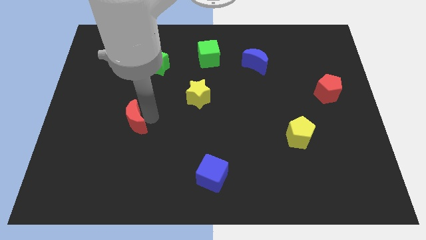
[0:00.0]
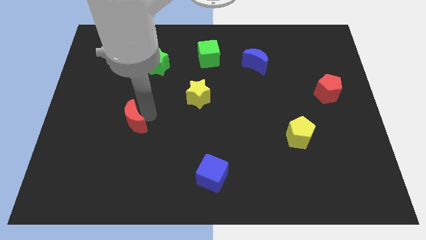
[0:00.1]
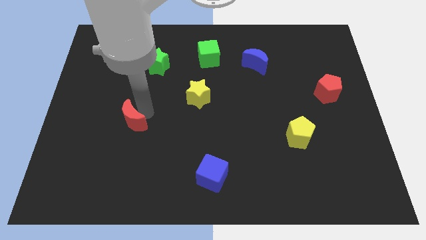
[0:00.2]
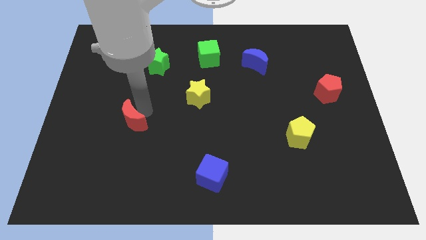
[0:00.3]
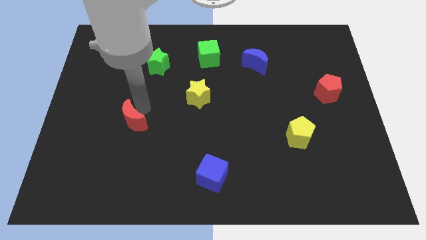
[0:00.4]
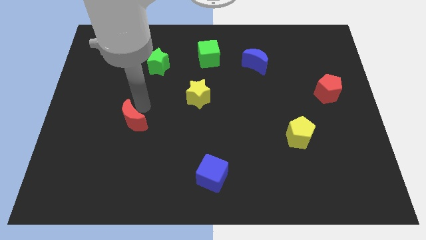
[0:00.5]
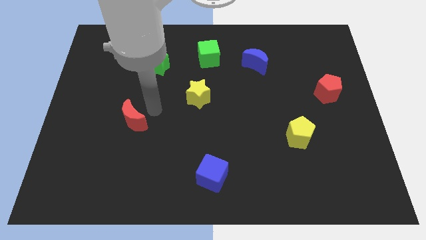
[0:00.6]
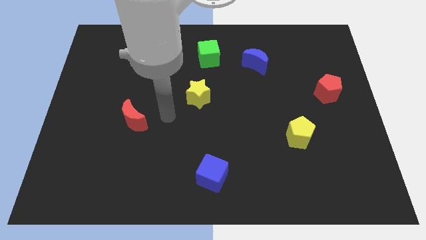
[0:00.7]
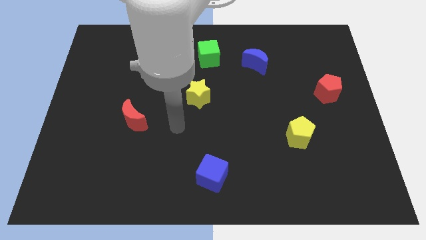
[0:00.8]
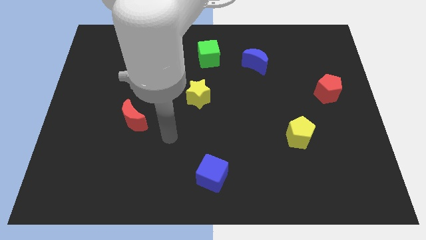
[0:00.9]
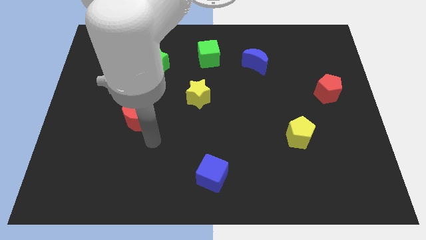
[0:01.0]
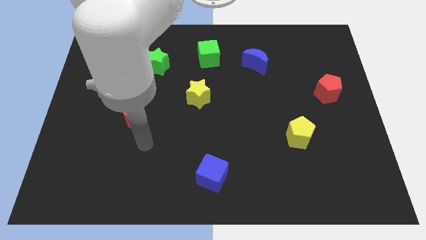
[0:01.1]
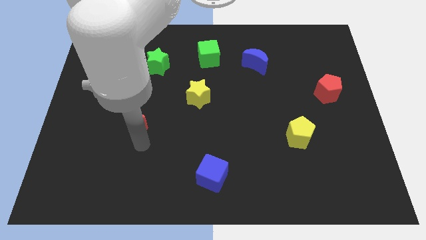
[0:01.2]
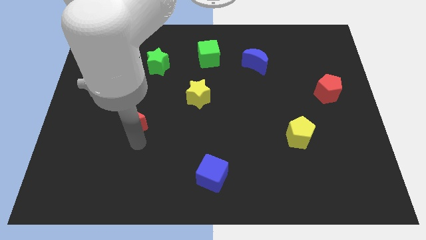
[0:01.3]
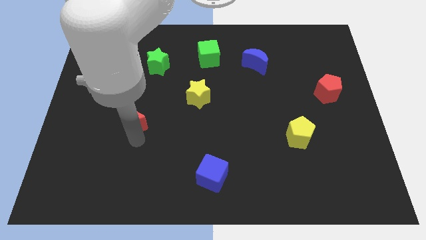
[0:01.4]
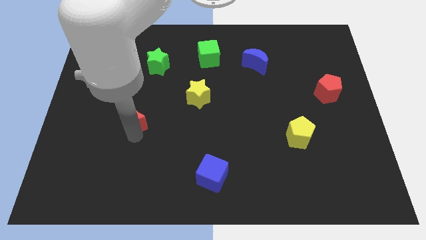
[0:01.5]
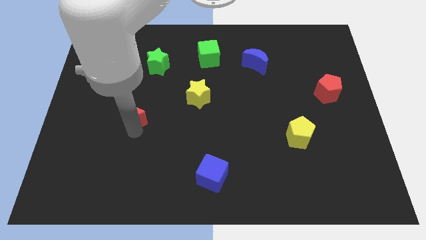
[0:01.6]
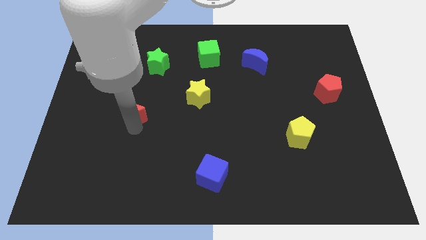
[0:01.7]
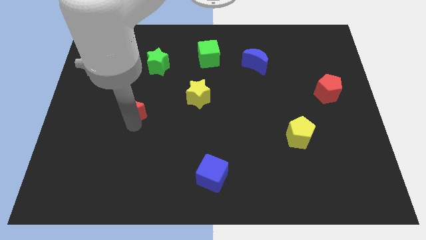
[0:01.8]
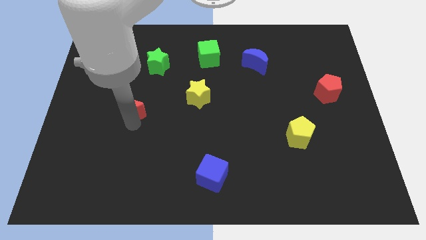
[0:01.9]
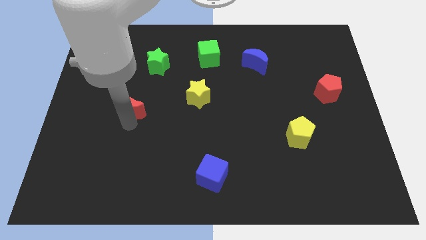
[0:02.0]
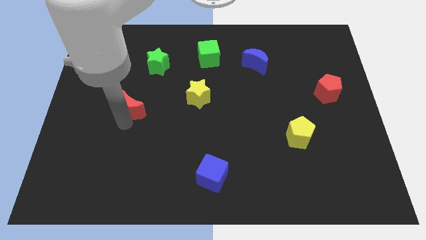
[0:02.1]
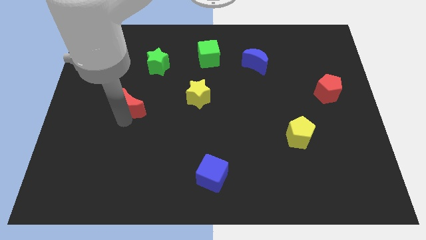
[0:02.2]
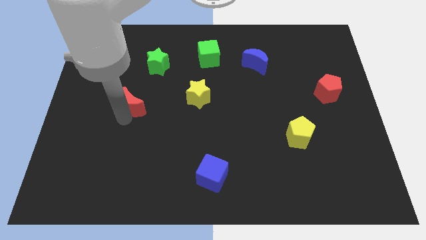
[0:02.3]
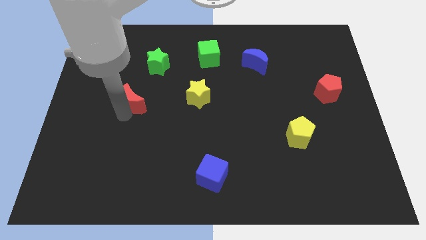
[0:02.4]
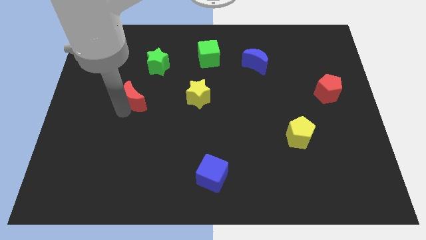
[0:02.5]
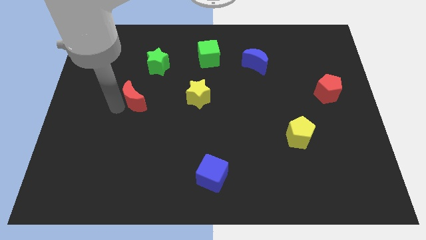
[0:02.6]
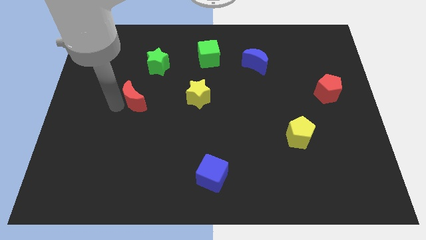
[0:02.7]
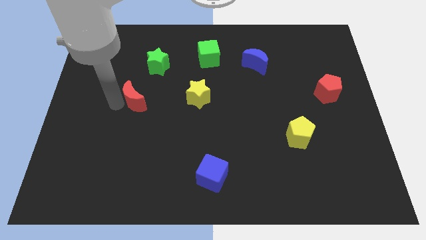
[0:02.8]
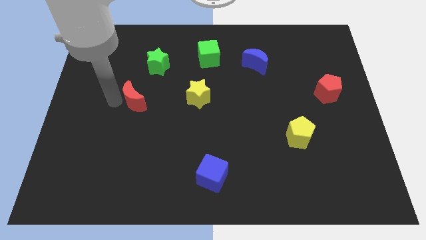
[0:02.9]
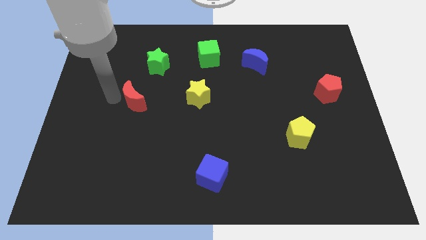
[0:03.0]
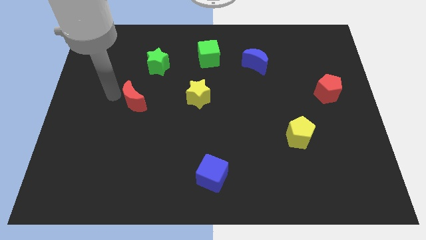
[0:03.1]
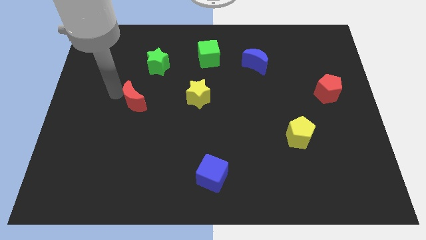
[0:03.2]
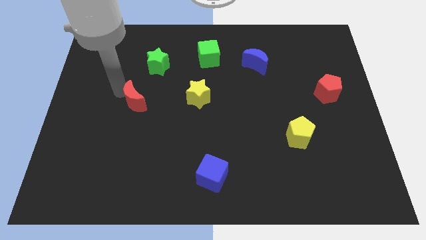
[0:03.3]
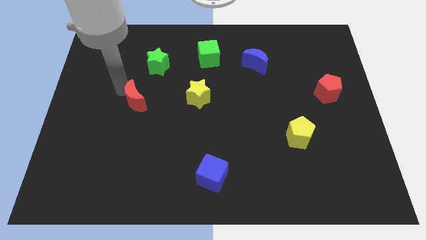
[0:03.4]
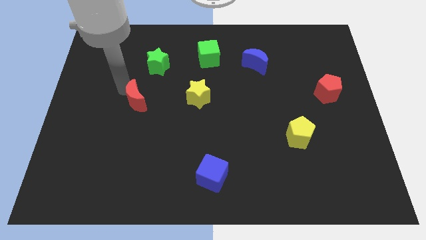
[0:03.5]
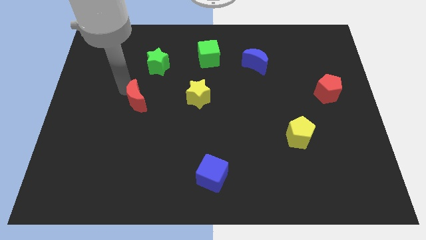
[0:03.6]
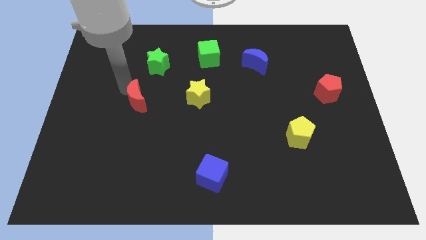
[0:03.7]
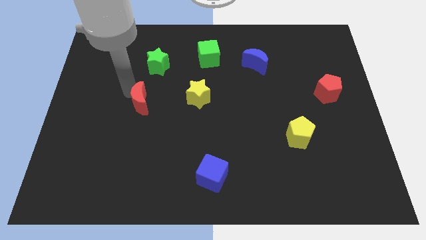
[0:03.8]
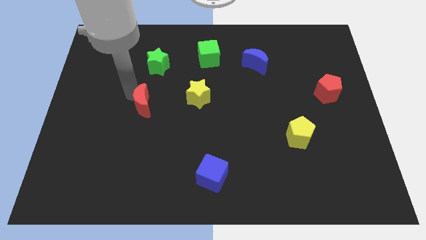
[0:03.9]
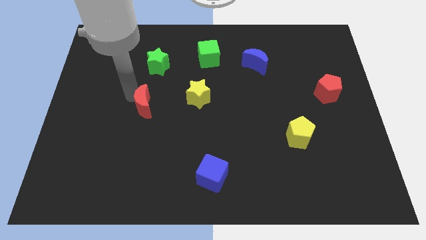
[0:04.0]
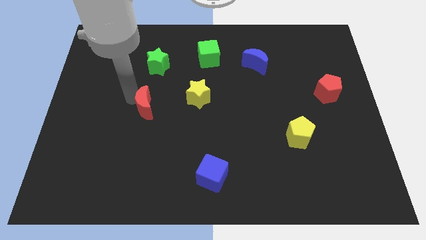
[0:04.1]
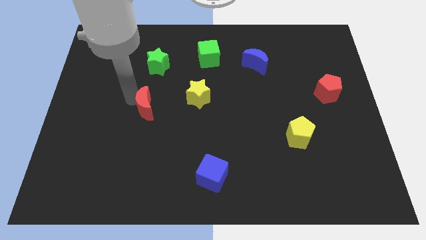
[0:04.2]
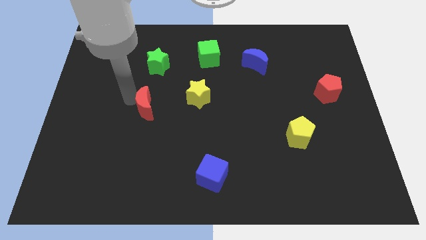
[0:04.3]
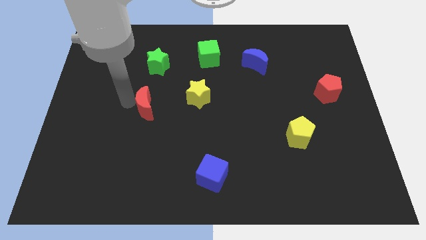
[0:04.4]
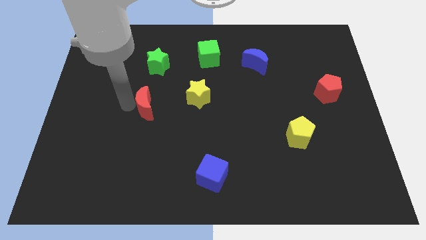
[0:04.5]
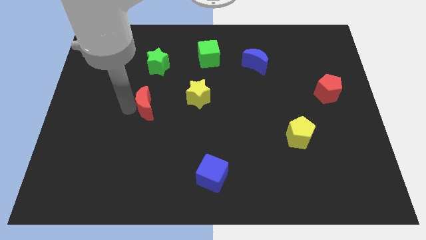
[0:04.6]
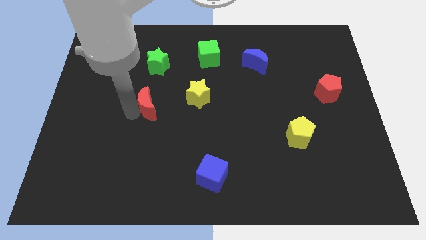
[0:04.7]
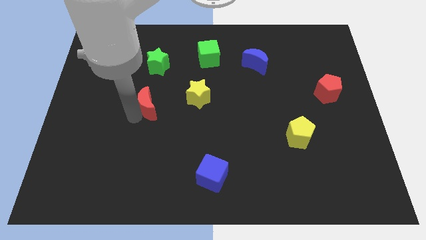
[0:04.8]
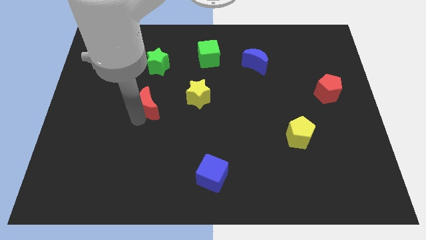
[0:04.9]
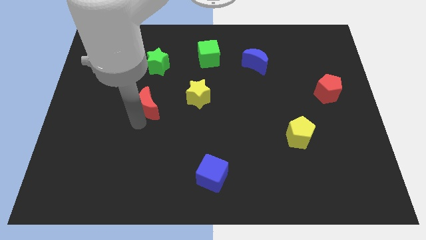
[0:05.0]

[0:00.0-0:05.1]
push the red crescent to the bottom of the green star

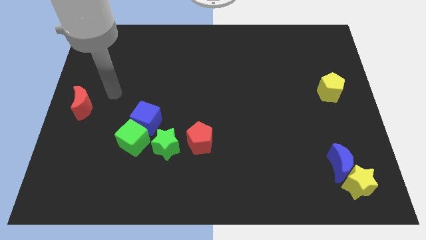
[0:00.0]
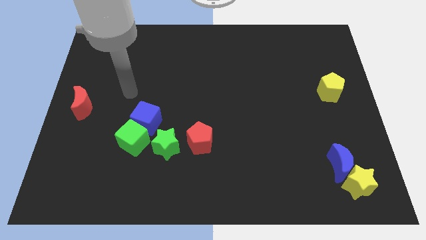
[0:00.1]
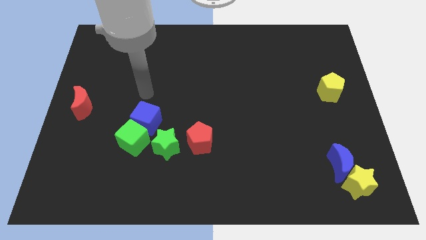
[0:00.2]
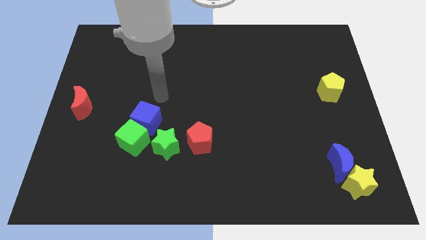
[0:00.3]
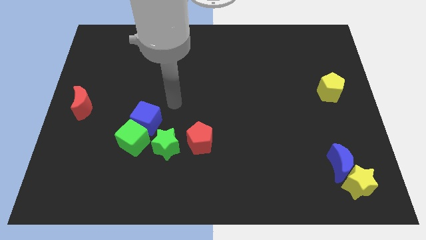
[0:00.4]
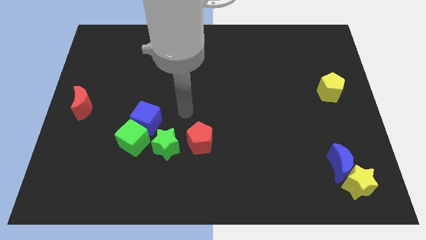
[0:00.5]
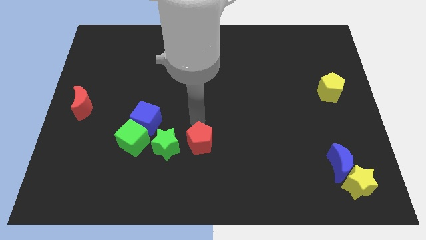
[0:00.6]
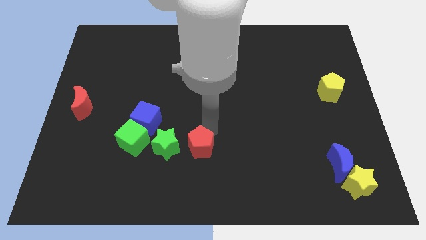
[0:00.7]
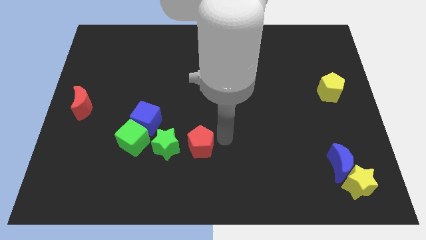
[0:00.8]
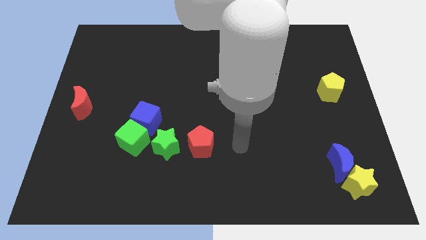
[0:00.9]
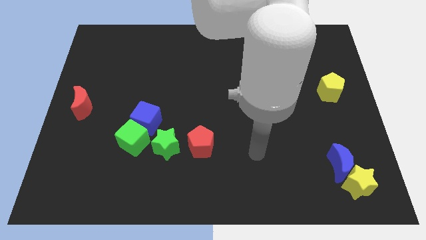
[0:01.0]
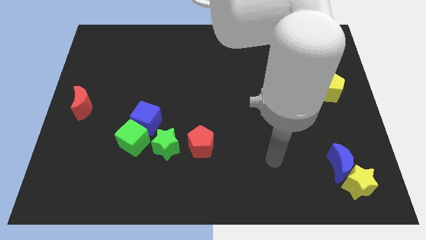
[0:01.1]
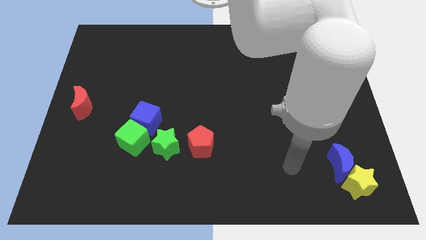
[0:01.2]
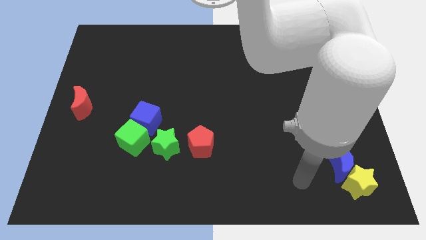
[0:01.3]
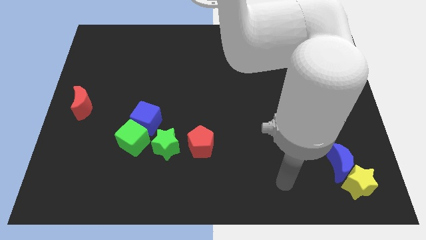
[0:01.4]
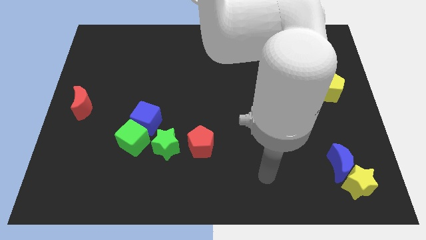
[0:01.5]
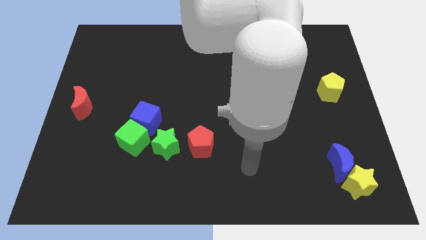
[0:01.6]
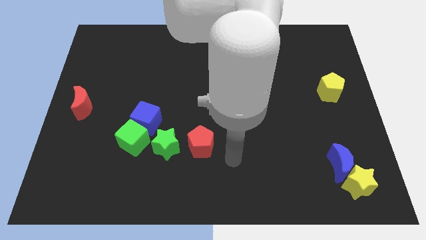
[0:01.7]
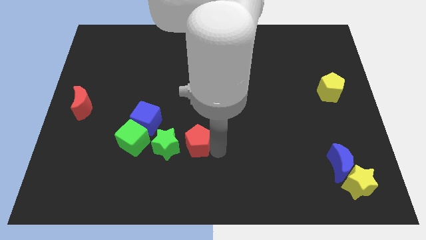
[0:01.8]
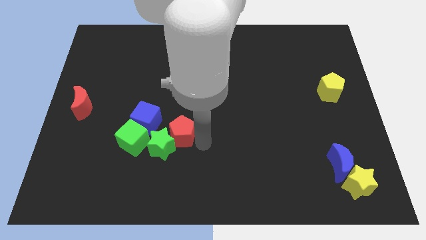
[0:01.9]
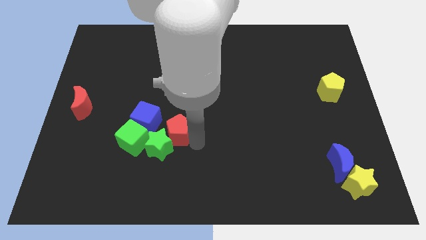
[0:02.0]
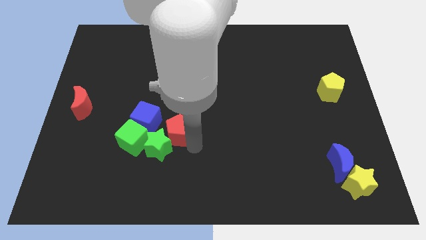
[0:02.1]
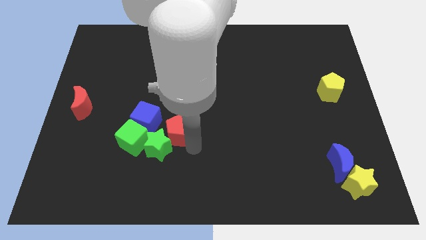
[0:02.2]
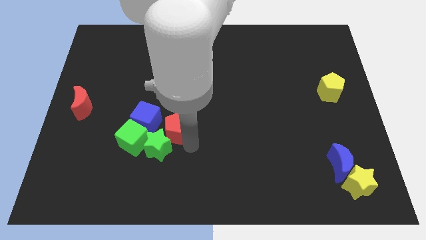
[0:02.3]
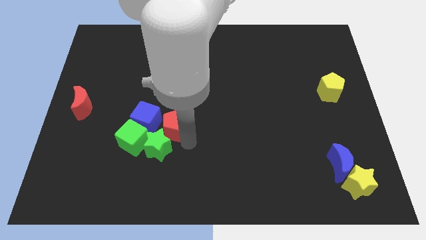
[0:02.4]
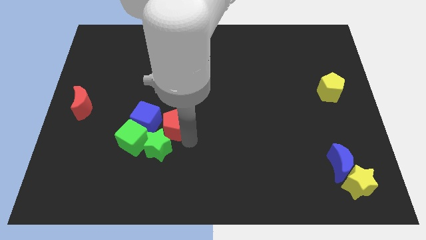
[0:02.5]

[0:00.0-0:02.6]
place the red pentagon at the top of the green star

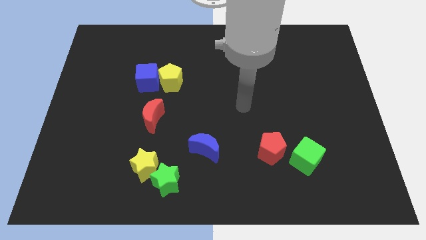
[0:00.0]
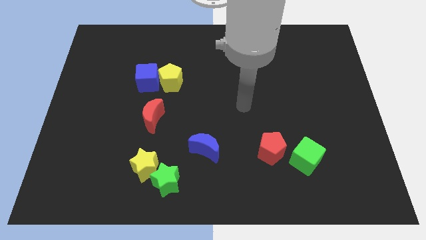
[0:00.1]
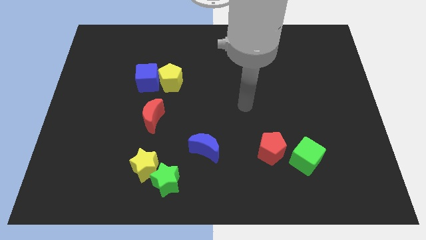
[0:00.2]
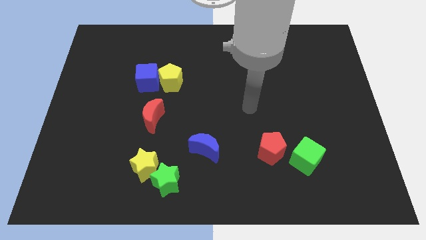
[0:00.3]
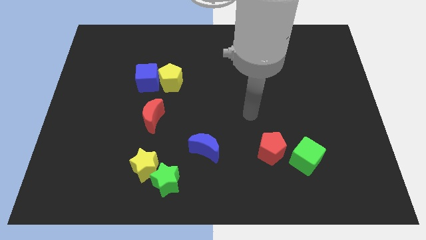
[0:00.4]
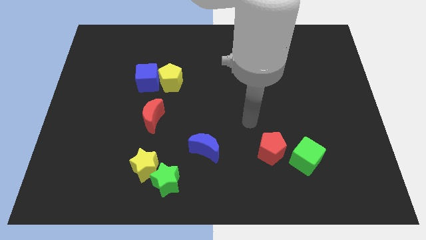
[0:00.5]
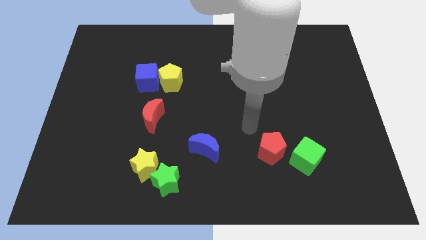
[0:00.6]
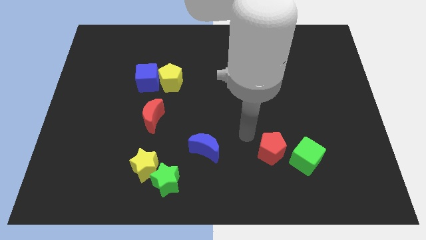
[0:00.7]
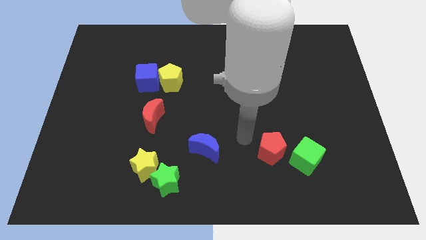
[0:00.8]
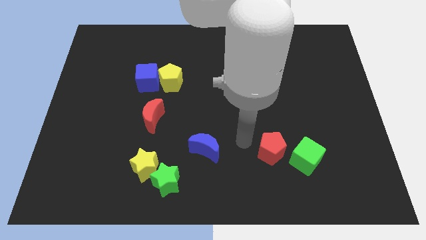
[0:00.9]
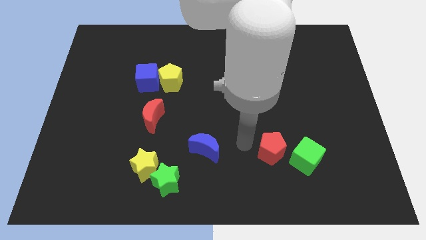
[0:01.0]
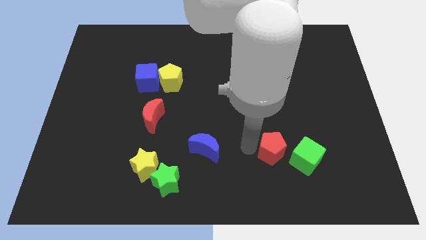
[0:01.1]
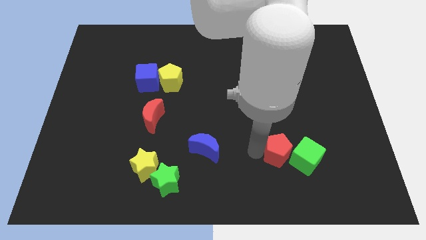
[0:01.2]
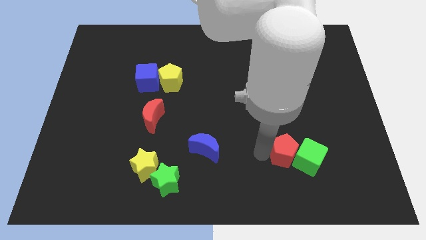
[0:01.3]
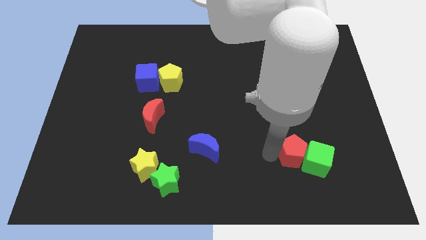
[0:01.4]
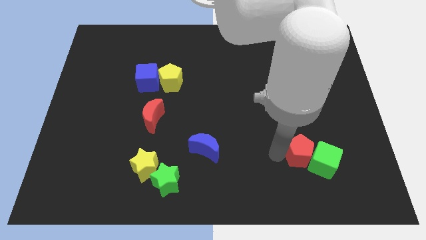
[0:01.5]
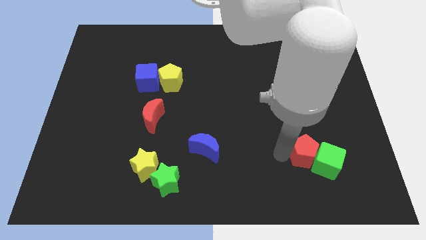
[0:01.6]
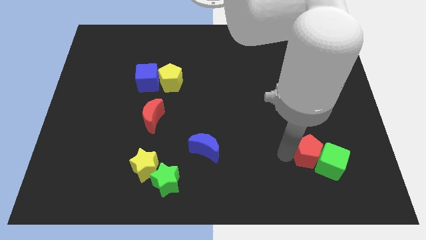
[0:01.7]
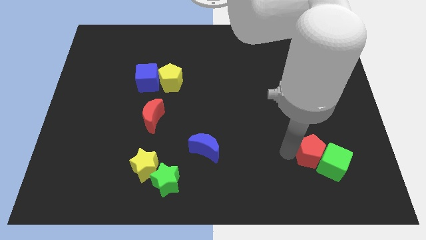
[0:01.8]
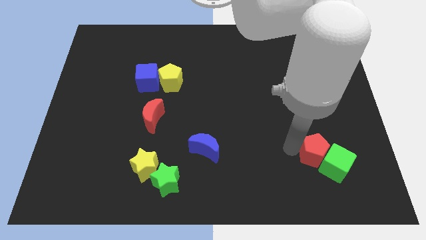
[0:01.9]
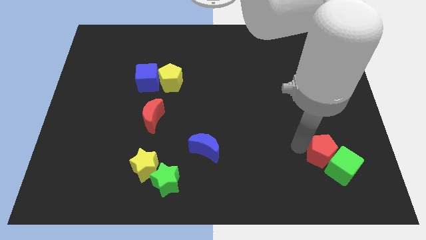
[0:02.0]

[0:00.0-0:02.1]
push the red pentagon into the green cube
